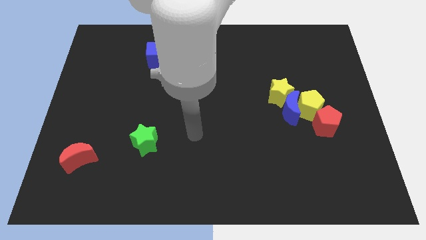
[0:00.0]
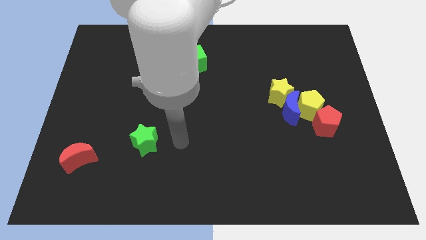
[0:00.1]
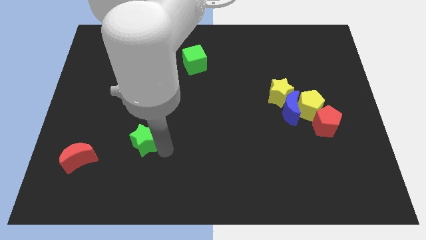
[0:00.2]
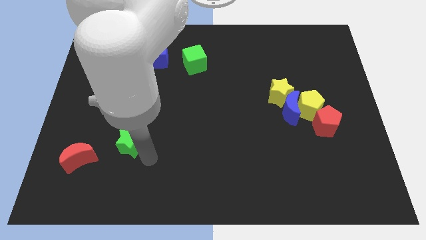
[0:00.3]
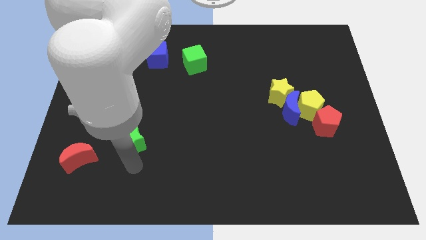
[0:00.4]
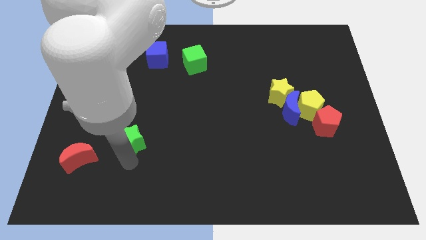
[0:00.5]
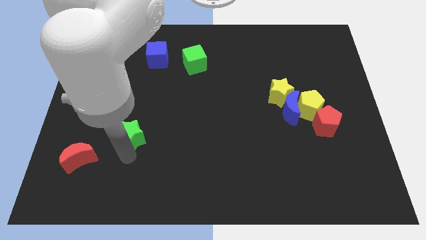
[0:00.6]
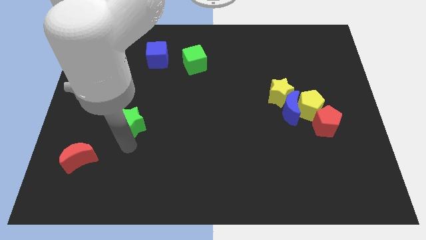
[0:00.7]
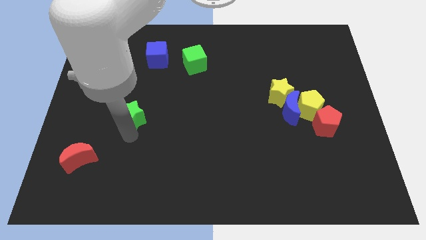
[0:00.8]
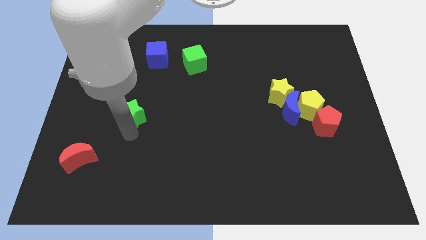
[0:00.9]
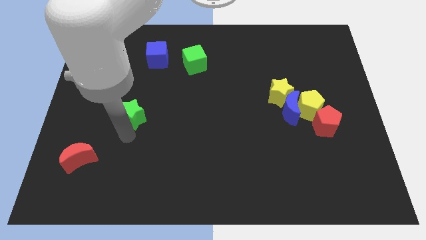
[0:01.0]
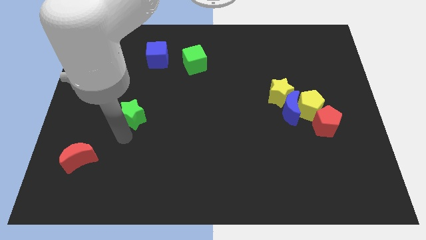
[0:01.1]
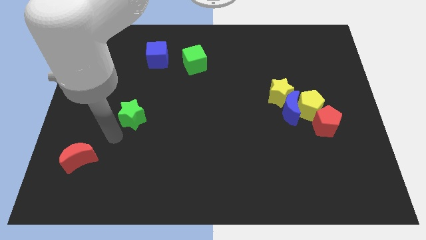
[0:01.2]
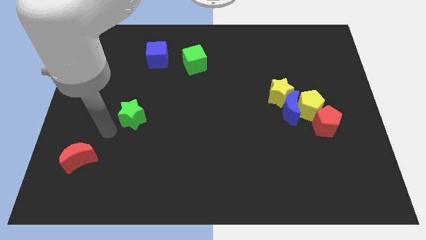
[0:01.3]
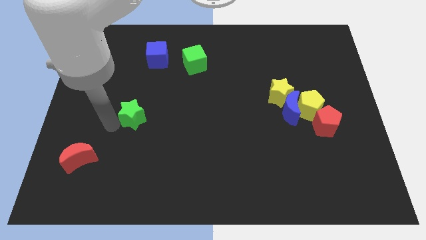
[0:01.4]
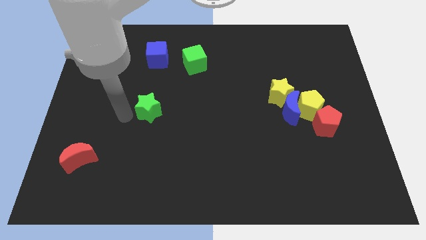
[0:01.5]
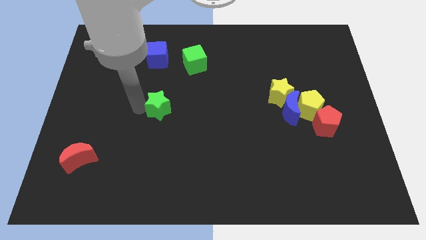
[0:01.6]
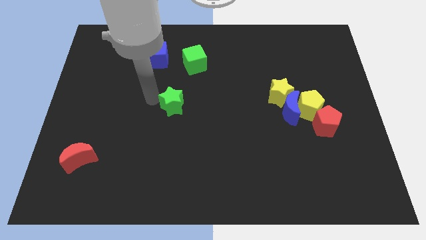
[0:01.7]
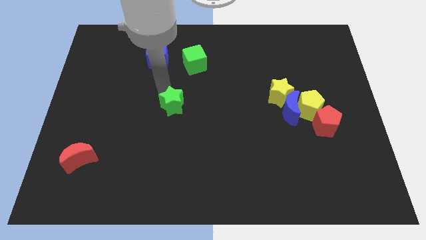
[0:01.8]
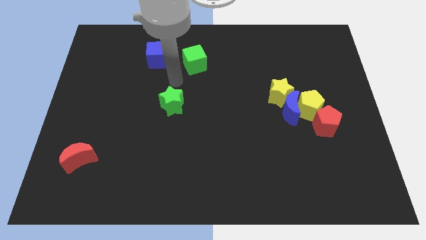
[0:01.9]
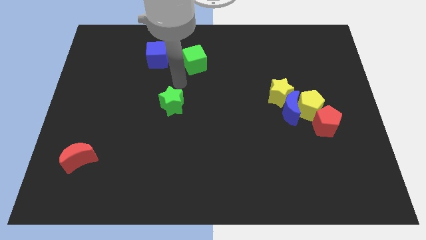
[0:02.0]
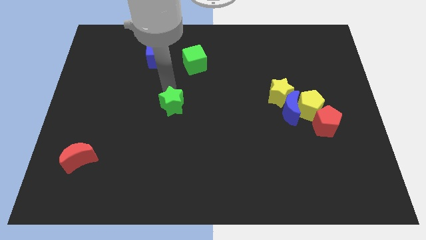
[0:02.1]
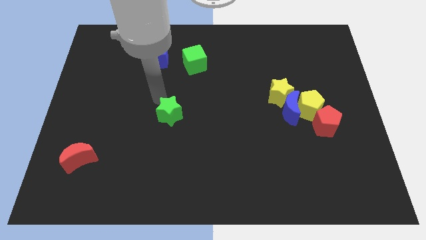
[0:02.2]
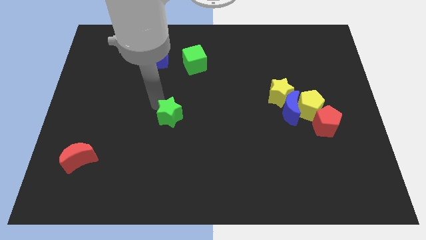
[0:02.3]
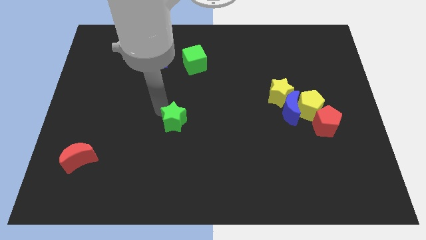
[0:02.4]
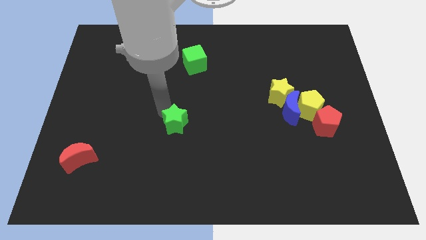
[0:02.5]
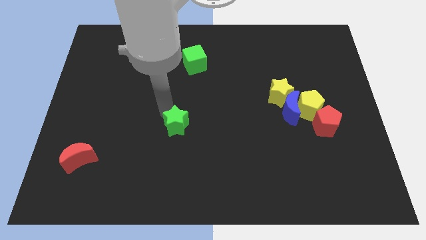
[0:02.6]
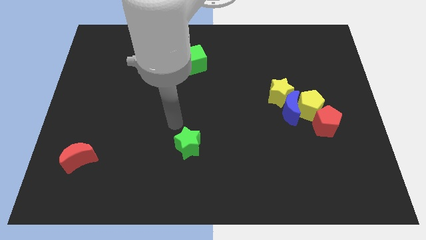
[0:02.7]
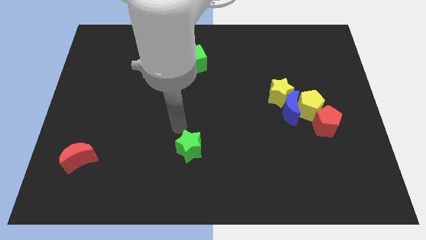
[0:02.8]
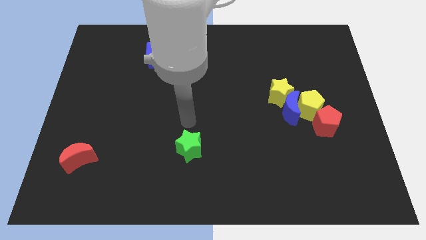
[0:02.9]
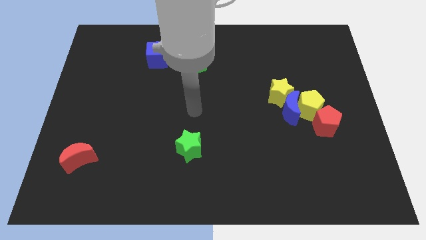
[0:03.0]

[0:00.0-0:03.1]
place the green star vertically at the bottom side of the green cube

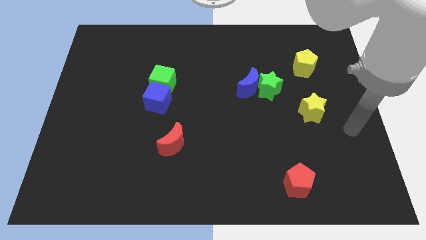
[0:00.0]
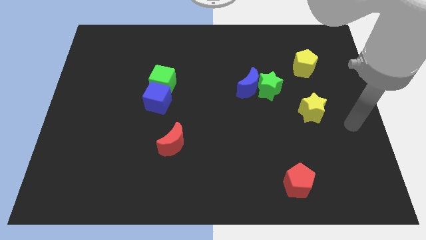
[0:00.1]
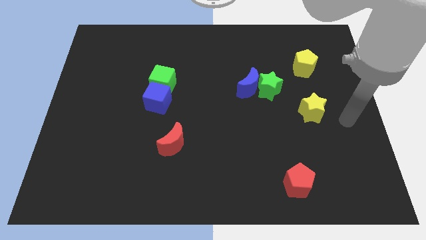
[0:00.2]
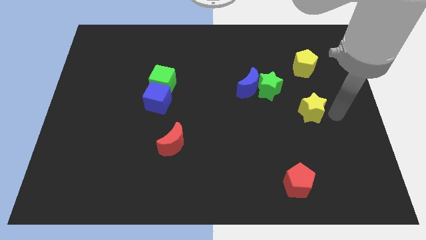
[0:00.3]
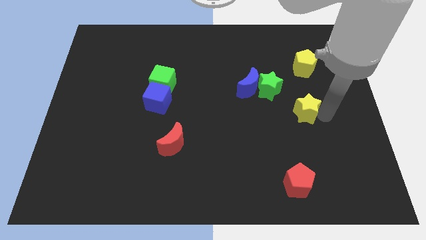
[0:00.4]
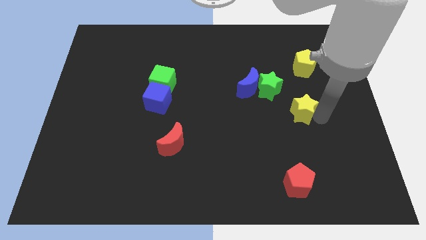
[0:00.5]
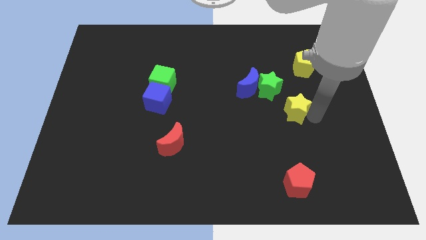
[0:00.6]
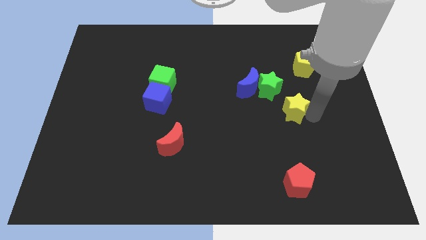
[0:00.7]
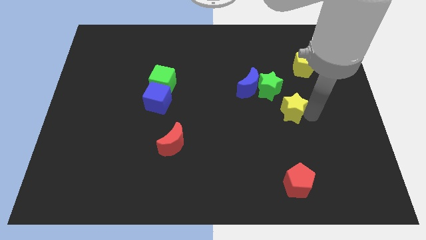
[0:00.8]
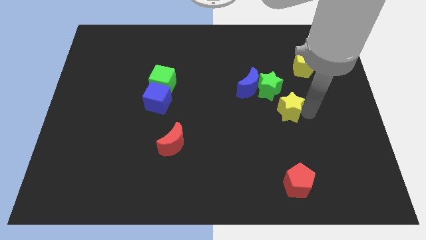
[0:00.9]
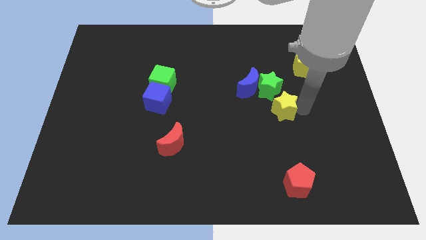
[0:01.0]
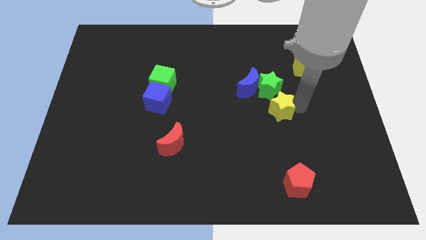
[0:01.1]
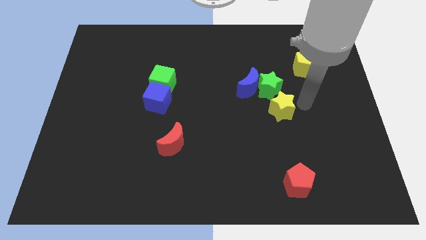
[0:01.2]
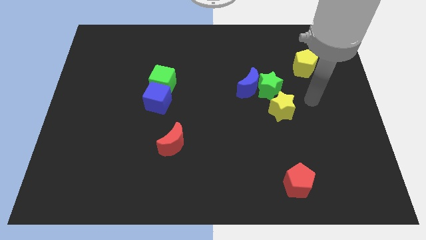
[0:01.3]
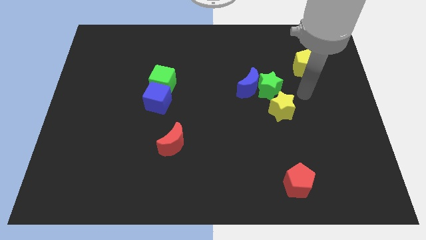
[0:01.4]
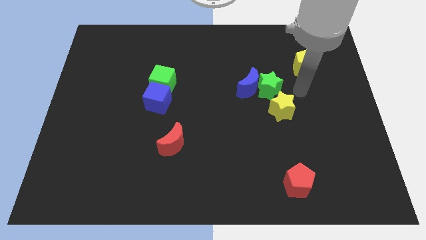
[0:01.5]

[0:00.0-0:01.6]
push the yellow star towards the green star

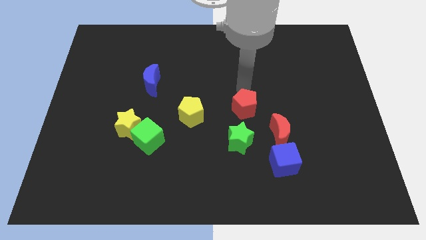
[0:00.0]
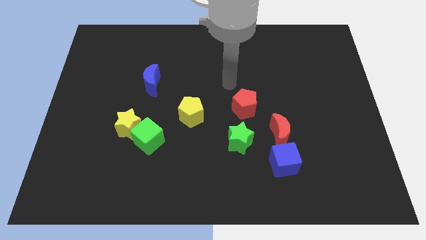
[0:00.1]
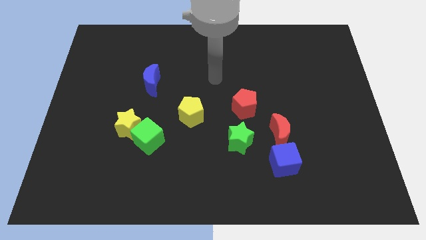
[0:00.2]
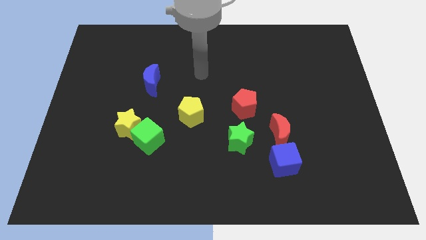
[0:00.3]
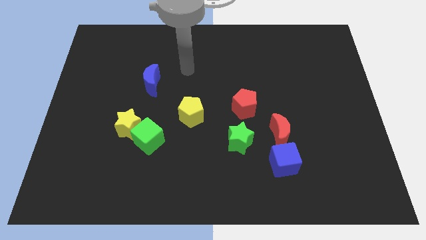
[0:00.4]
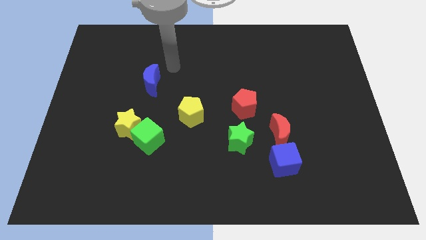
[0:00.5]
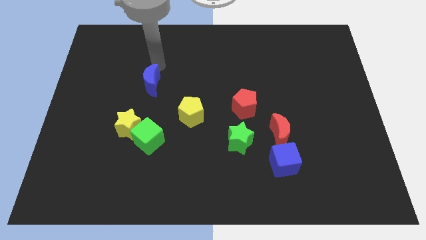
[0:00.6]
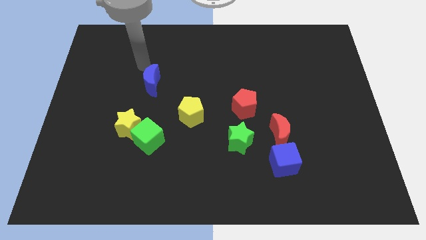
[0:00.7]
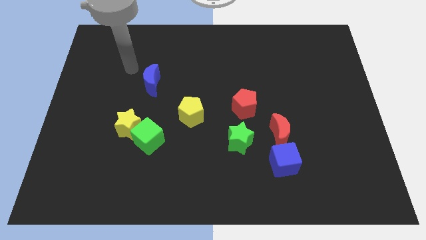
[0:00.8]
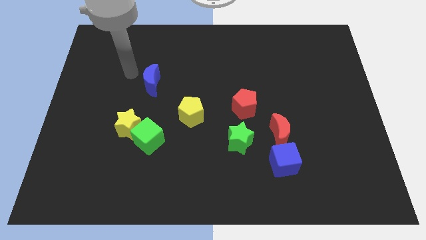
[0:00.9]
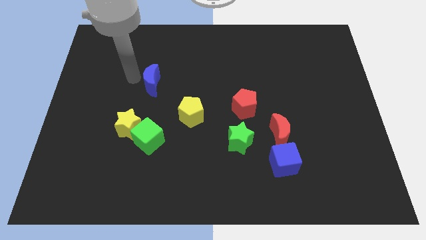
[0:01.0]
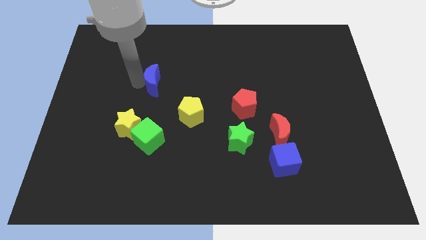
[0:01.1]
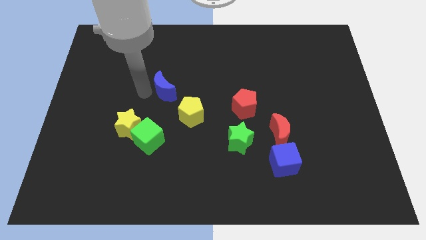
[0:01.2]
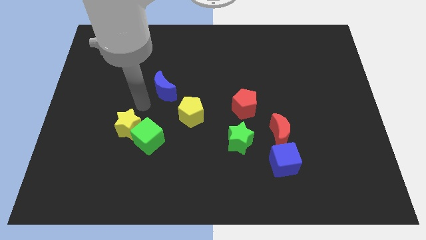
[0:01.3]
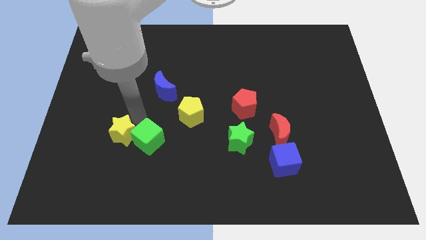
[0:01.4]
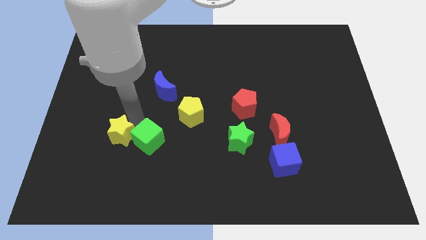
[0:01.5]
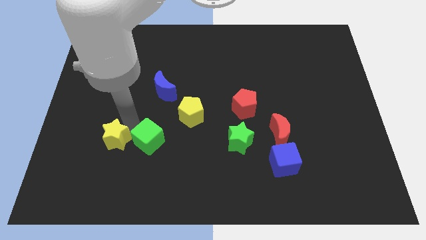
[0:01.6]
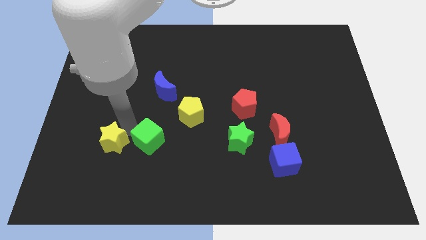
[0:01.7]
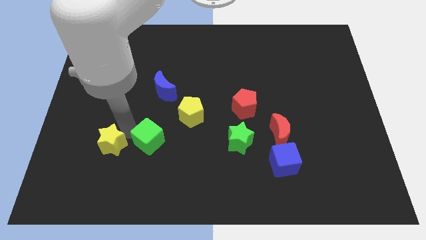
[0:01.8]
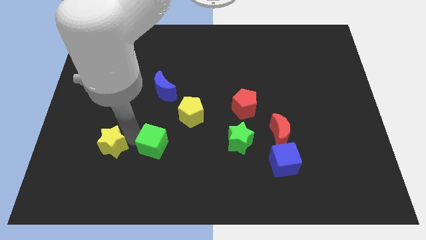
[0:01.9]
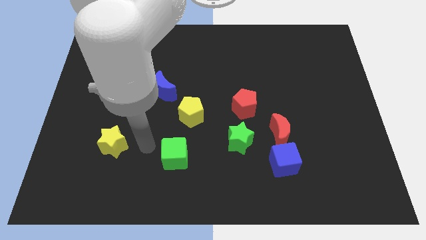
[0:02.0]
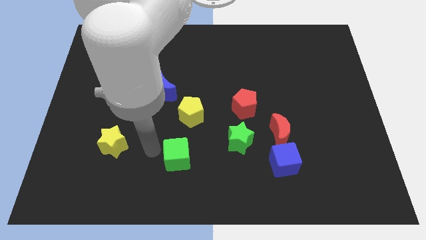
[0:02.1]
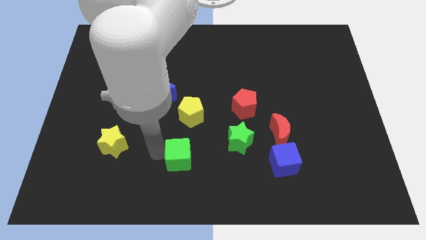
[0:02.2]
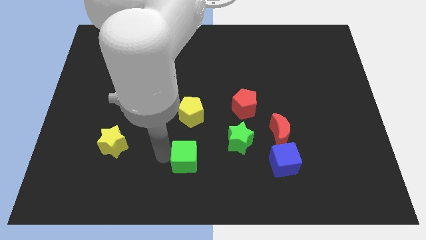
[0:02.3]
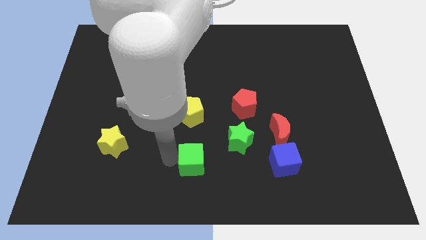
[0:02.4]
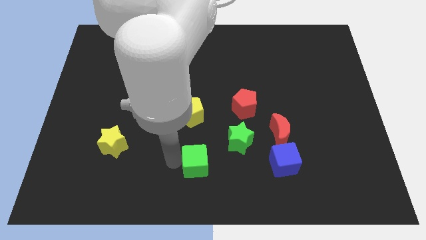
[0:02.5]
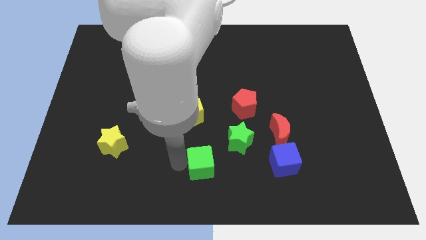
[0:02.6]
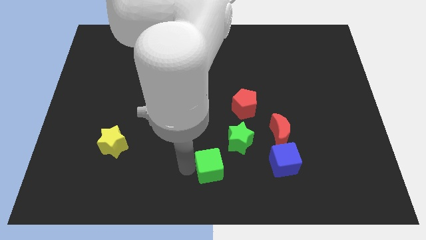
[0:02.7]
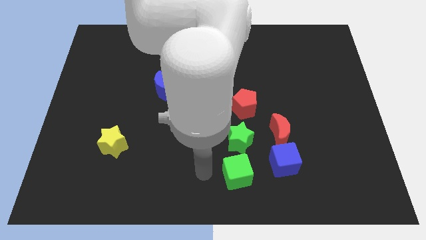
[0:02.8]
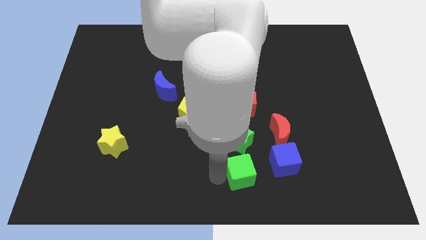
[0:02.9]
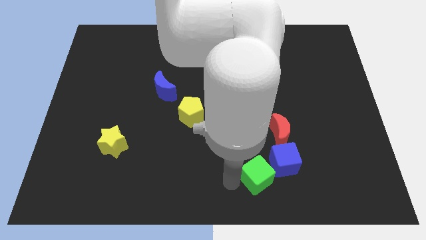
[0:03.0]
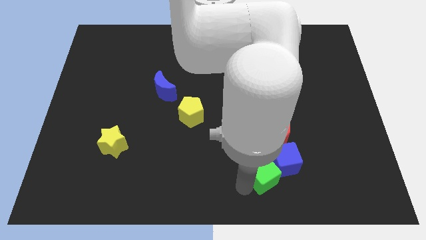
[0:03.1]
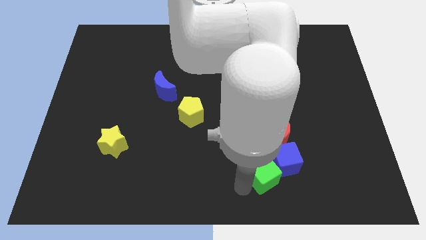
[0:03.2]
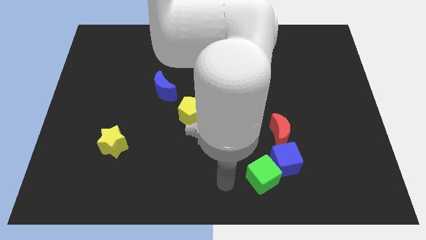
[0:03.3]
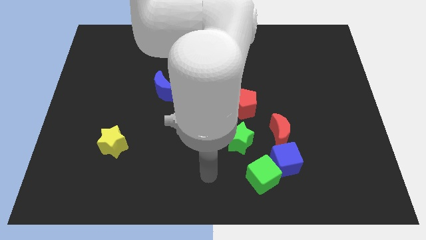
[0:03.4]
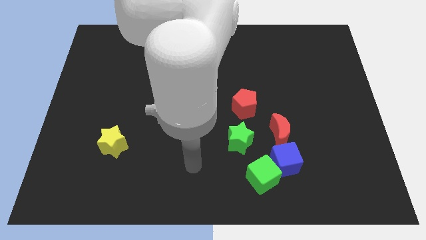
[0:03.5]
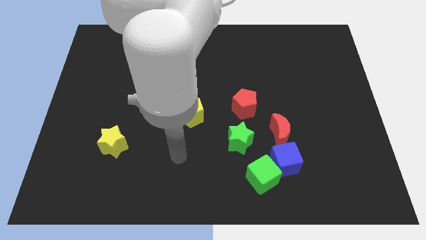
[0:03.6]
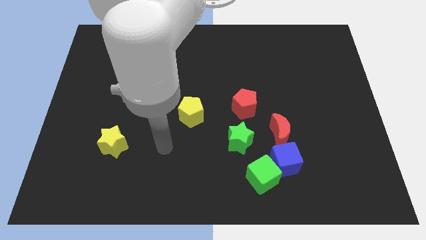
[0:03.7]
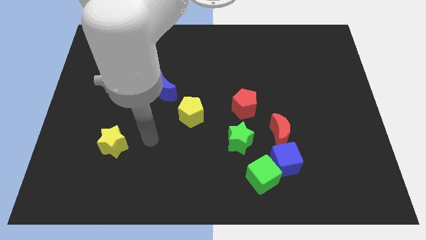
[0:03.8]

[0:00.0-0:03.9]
push the green cube into the blue cube

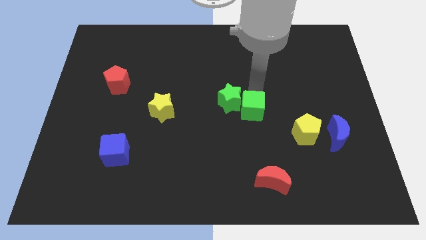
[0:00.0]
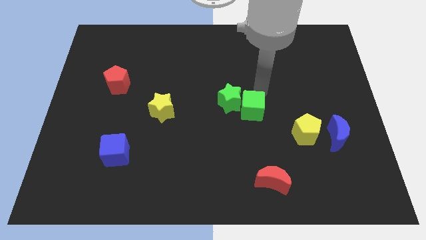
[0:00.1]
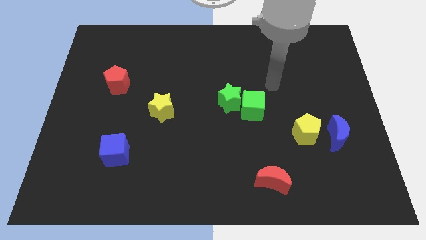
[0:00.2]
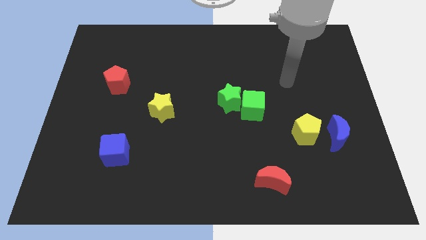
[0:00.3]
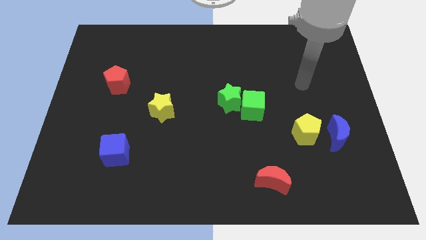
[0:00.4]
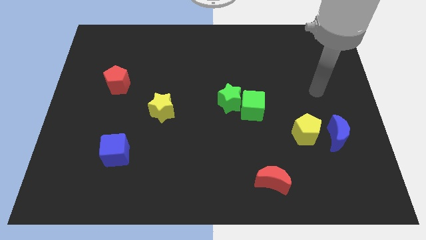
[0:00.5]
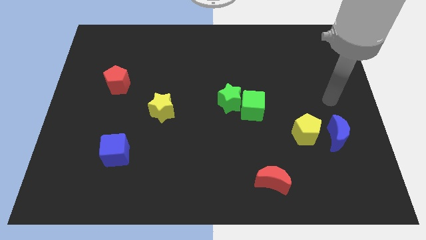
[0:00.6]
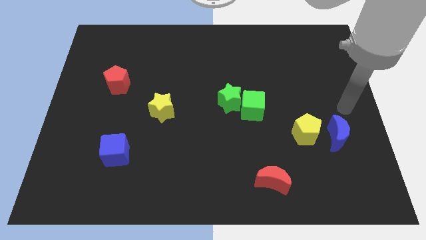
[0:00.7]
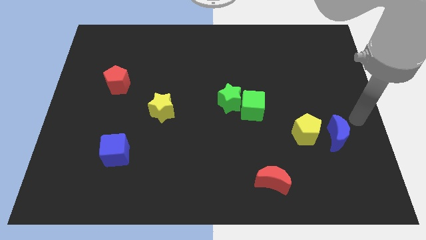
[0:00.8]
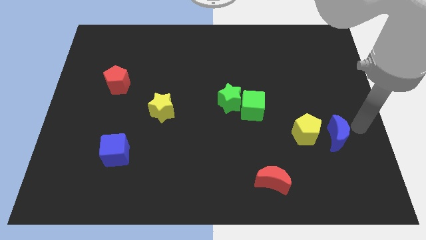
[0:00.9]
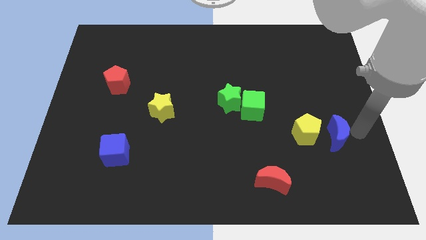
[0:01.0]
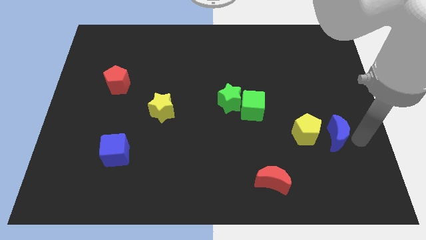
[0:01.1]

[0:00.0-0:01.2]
move your arm towards the blue crescent
